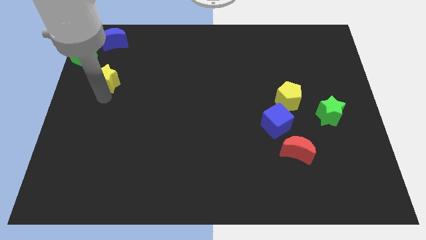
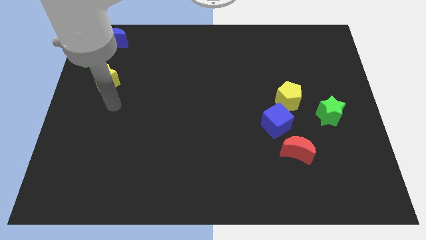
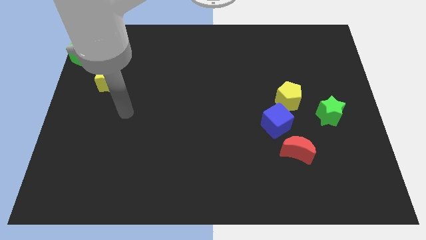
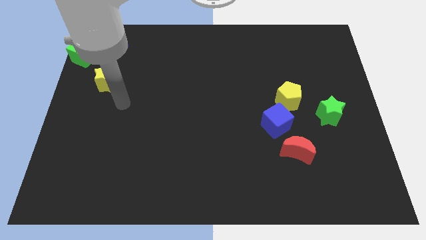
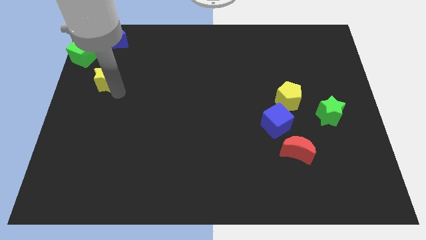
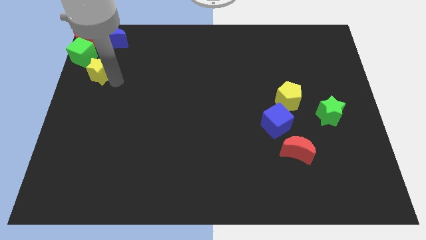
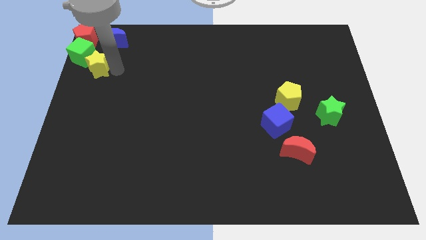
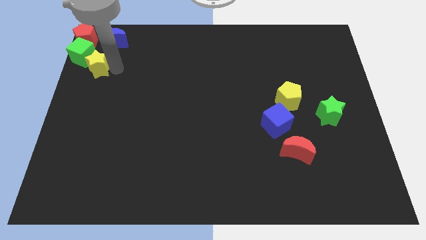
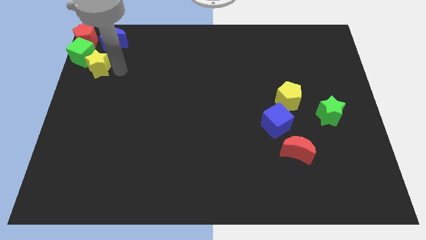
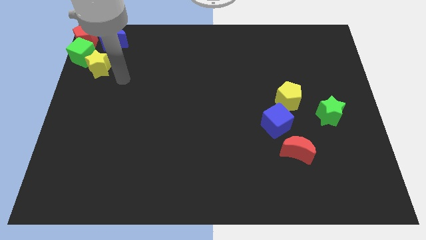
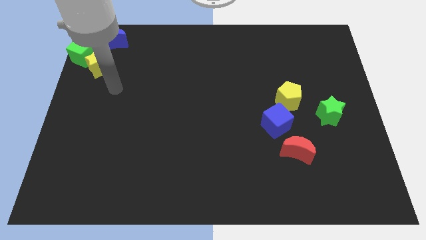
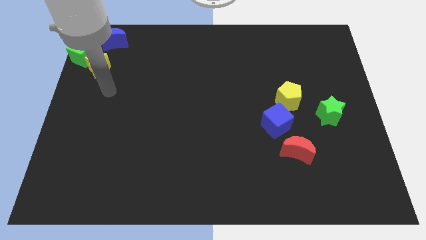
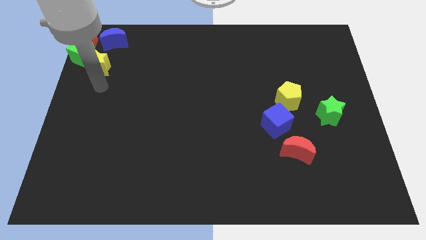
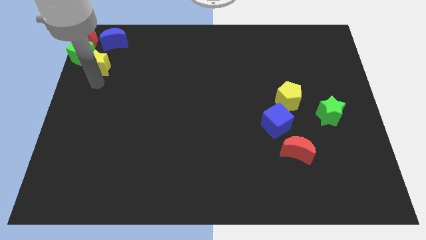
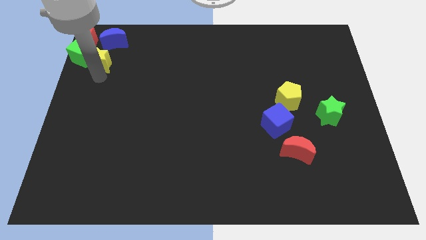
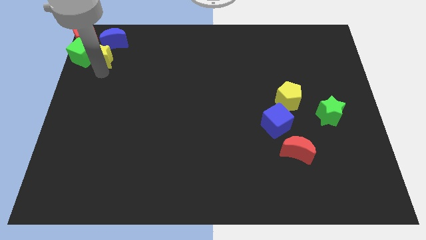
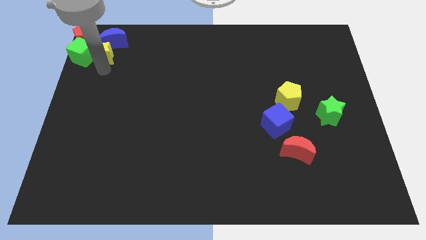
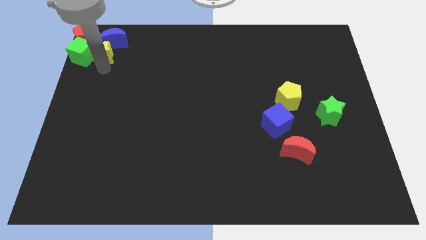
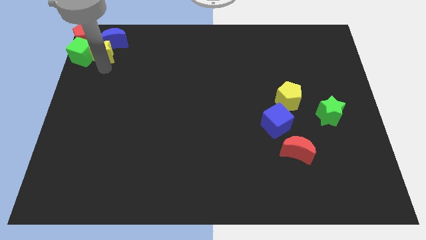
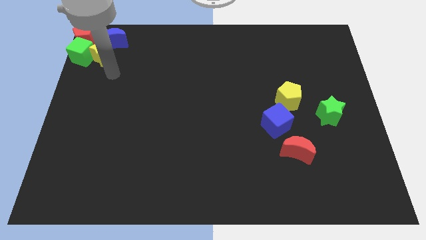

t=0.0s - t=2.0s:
push the yellow star into the green cube and blue crescent

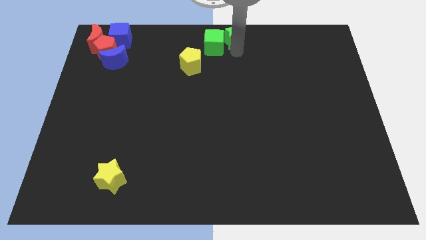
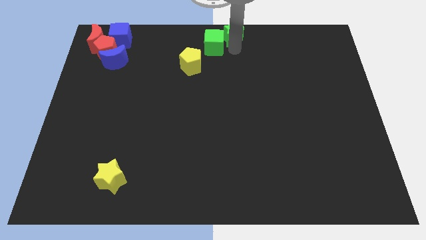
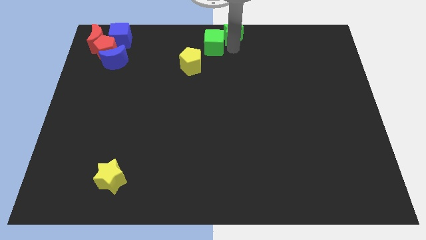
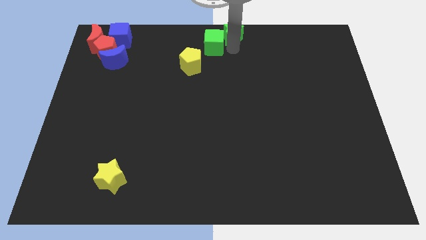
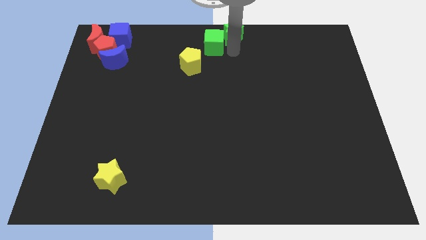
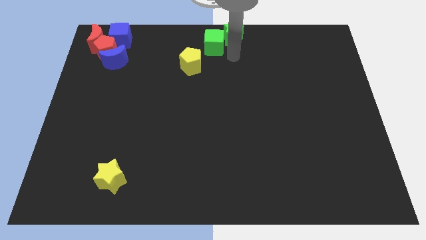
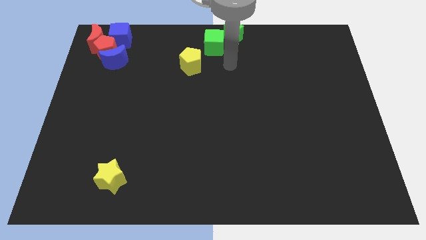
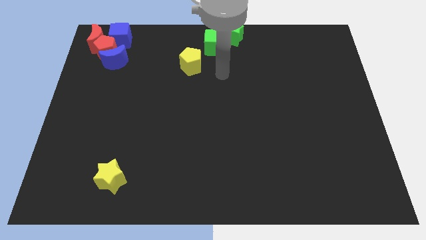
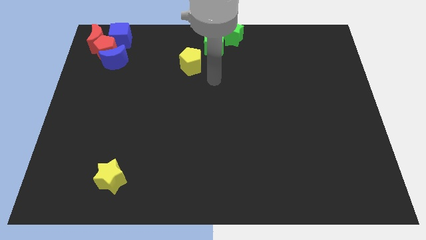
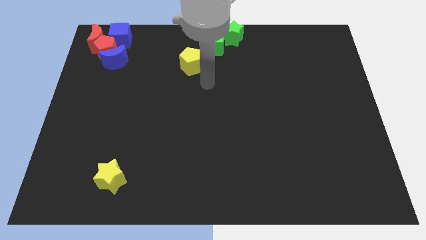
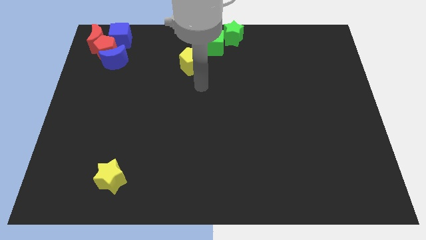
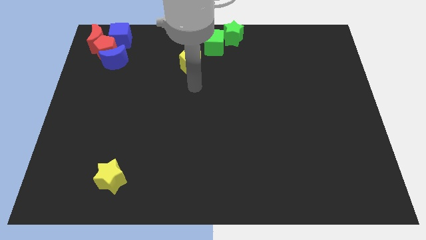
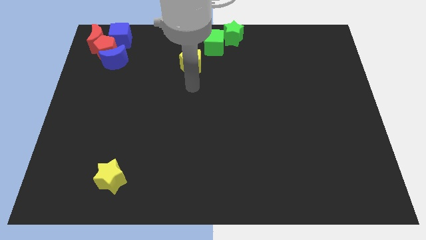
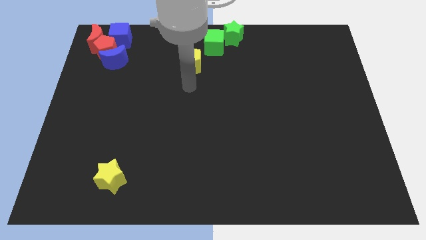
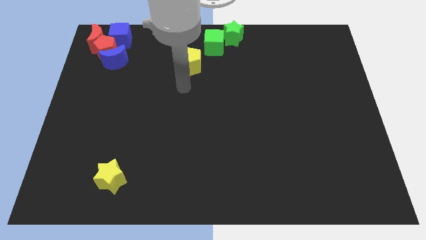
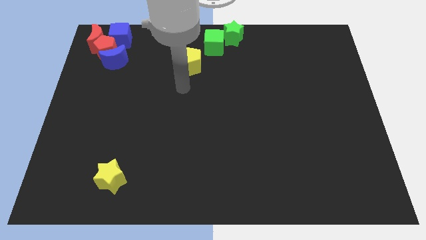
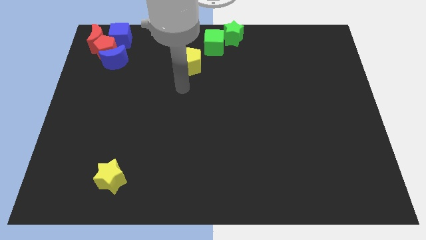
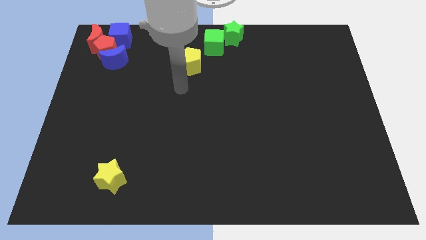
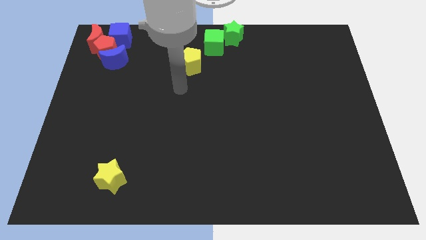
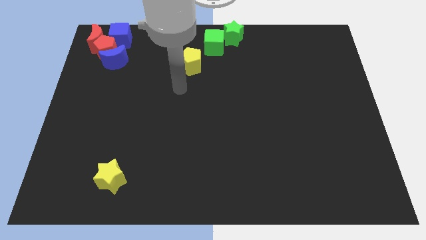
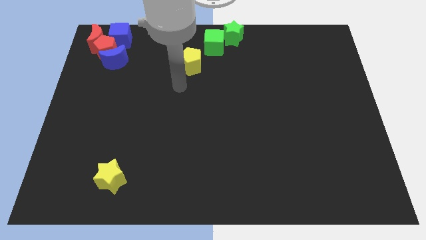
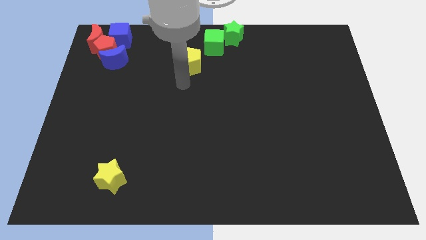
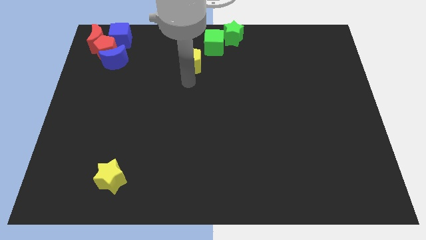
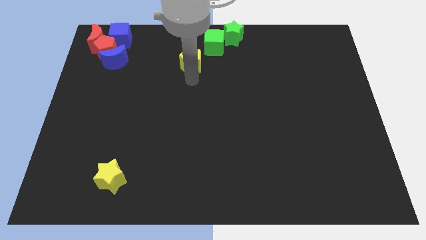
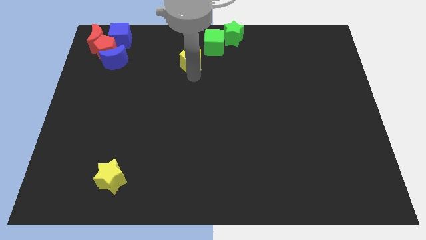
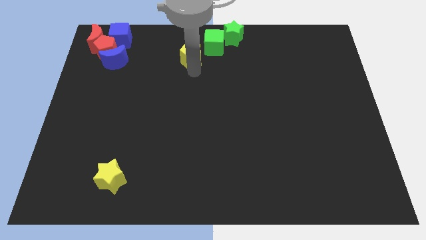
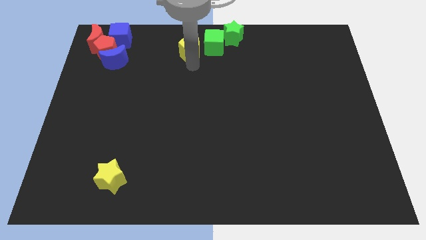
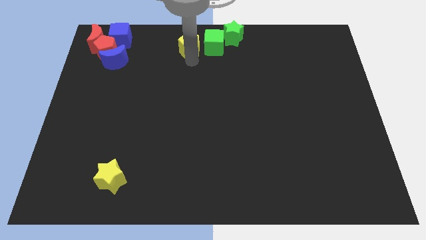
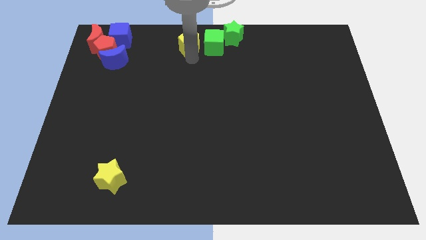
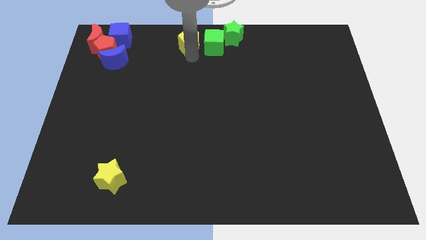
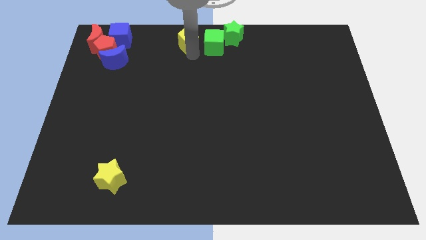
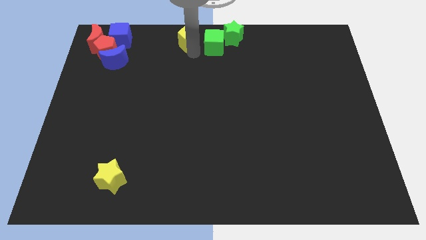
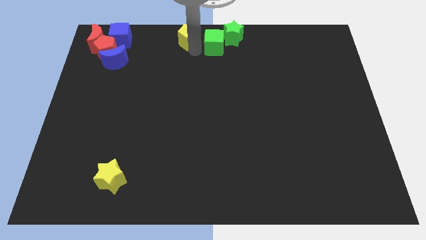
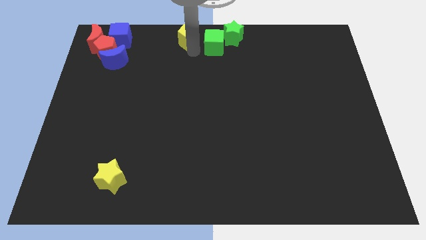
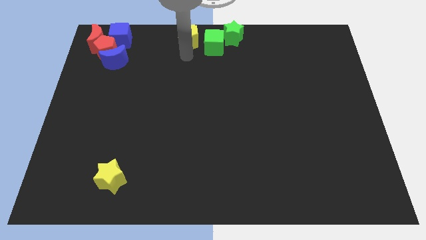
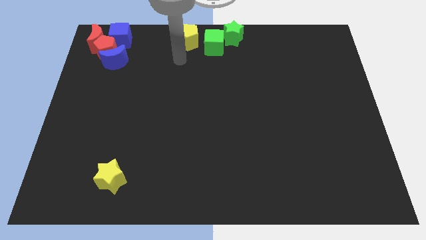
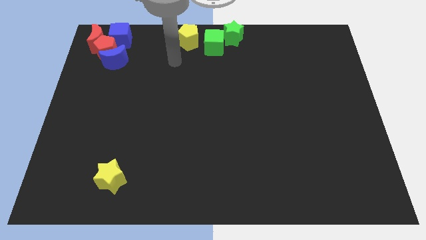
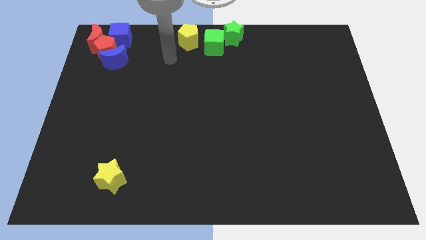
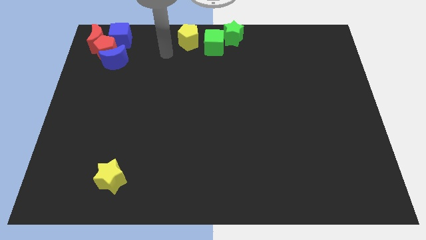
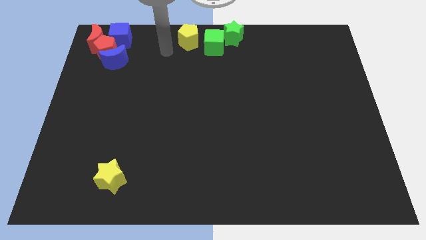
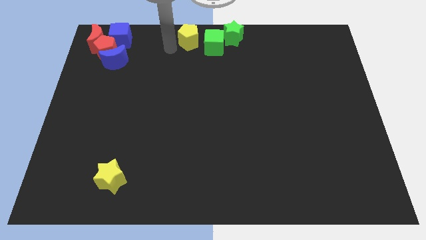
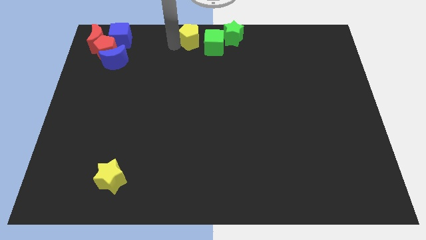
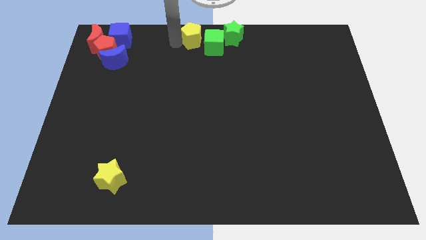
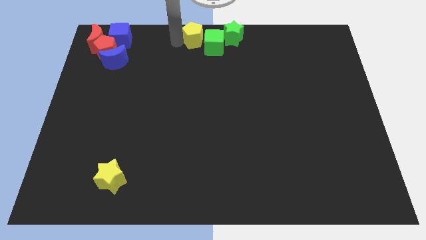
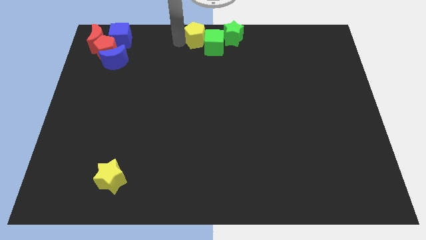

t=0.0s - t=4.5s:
place the yellow pentagon left to the green cube

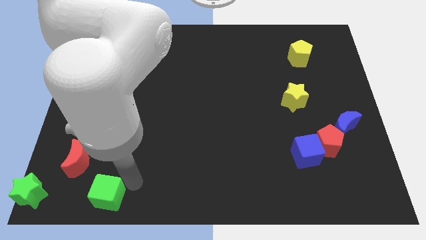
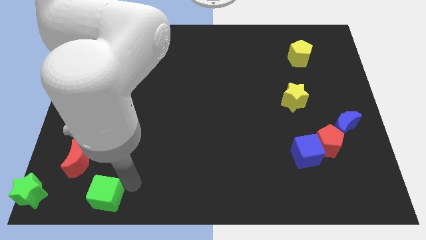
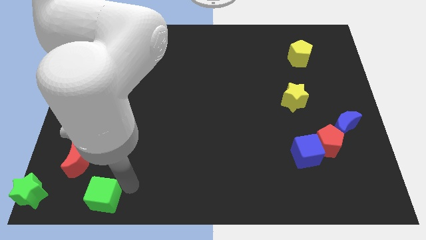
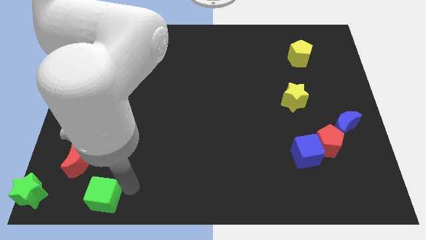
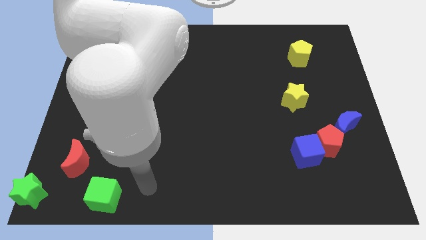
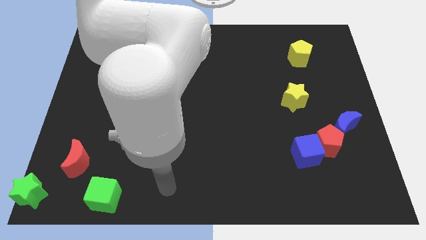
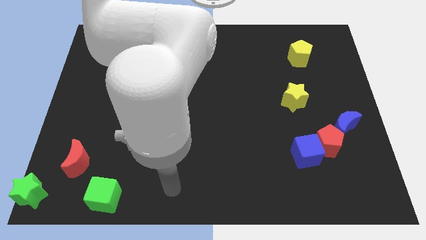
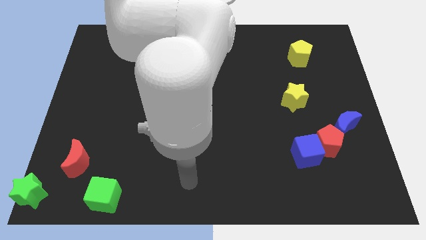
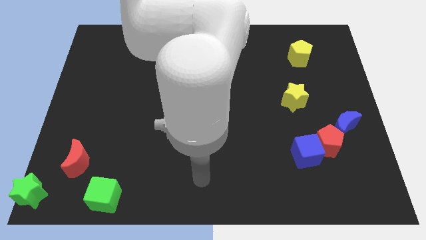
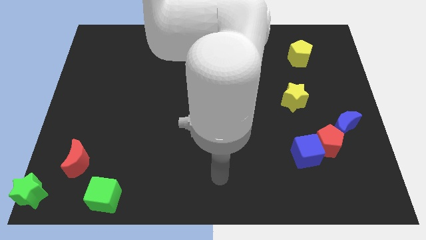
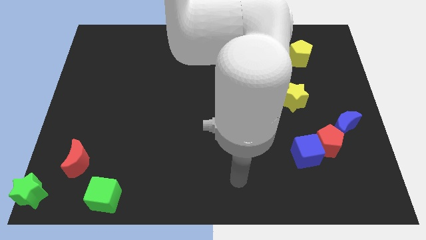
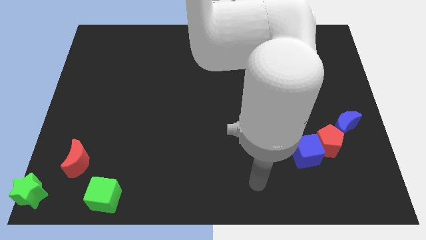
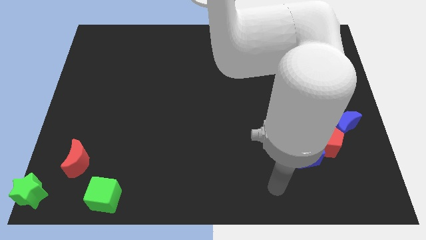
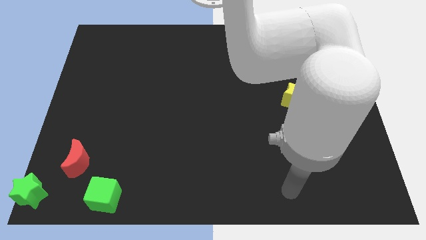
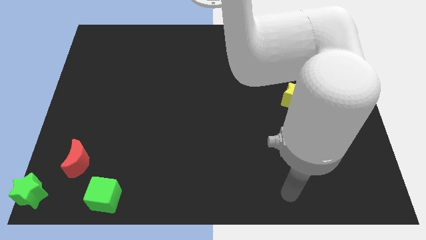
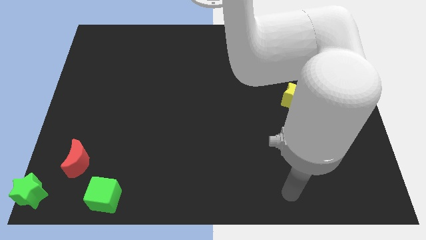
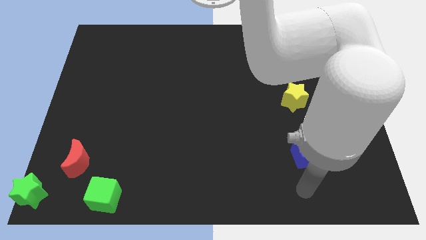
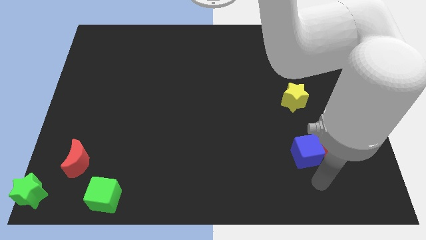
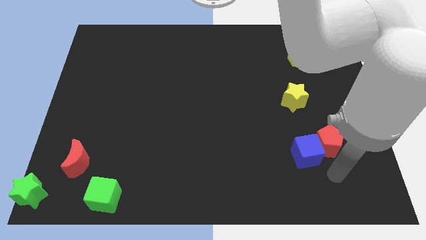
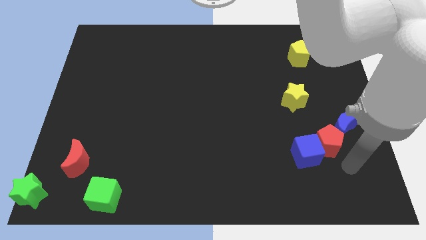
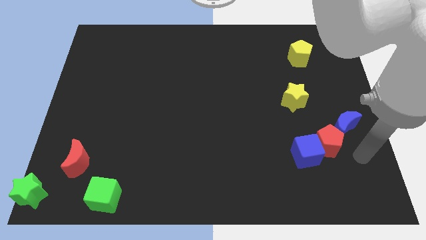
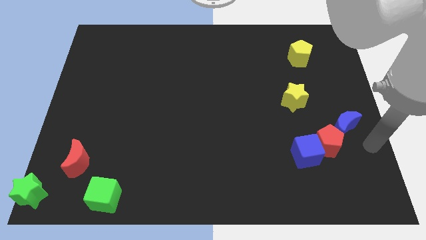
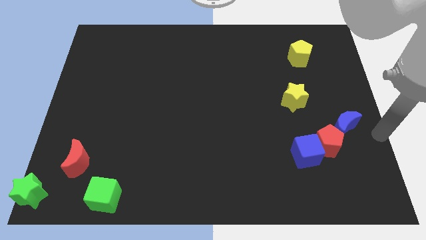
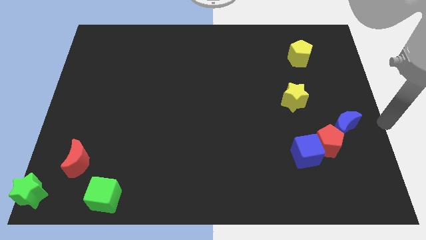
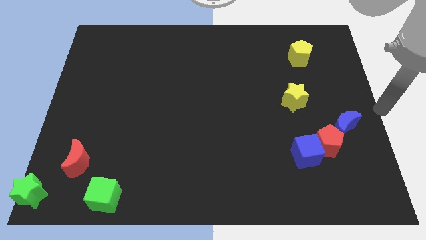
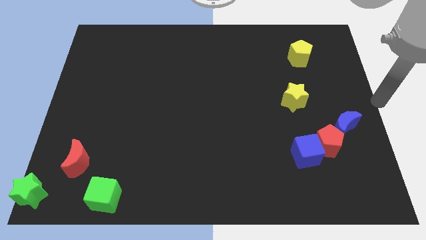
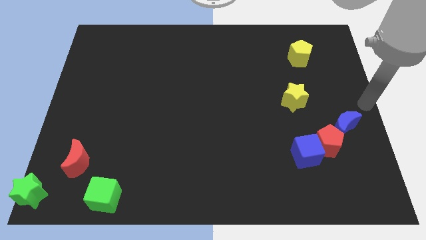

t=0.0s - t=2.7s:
go away from the green cube
